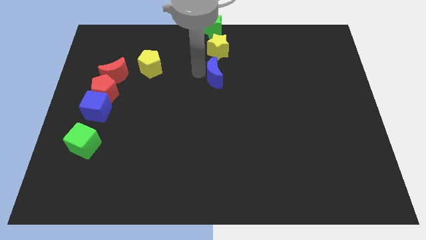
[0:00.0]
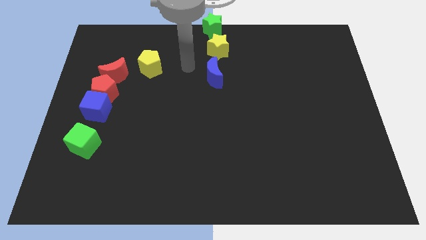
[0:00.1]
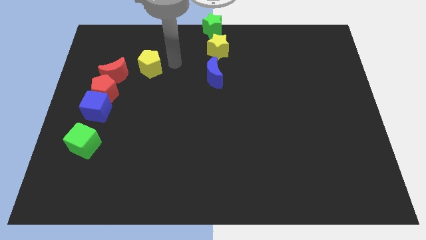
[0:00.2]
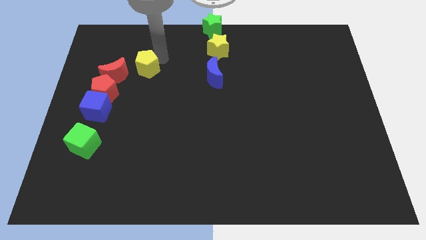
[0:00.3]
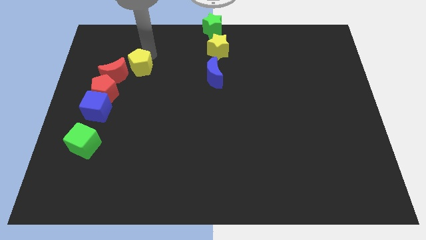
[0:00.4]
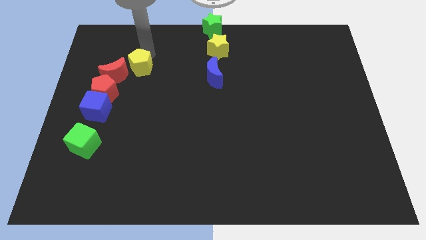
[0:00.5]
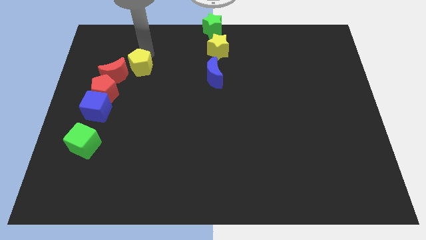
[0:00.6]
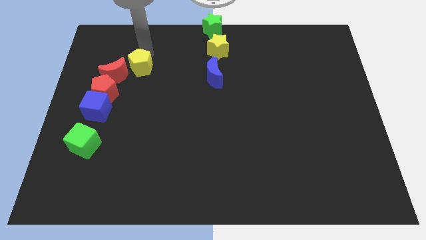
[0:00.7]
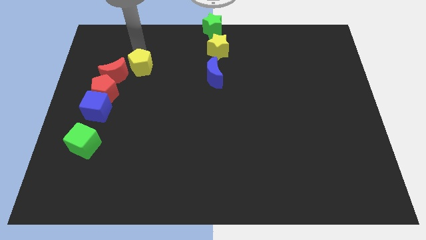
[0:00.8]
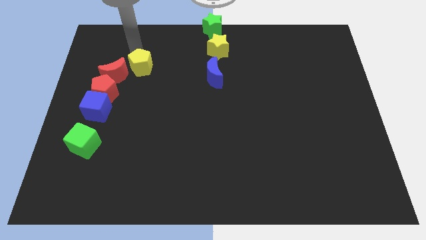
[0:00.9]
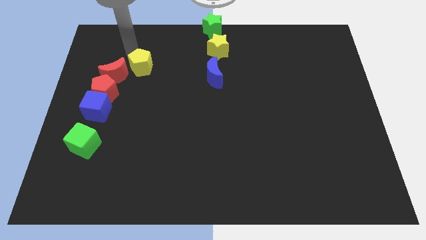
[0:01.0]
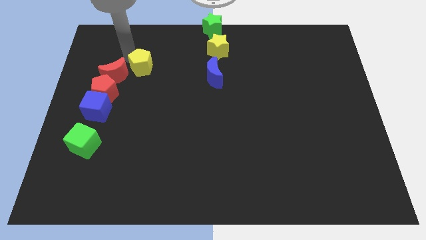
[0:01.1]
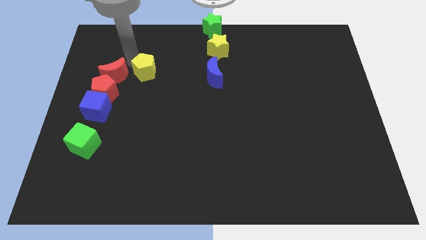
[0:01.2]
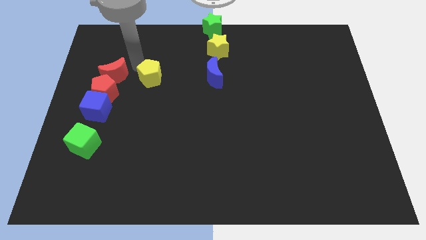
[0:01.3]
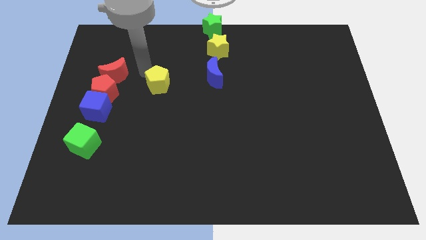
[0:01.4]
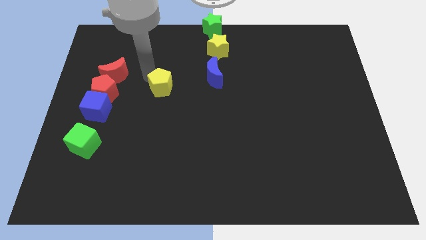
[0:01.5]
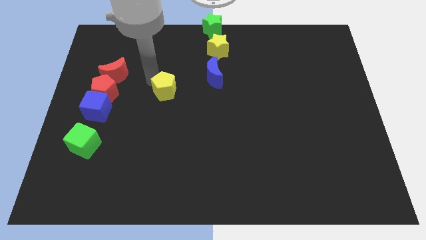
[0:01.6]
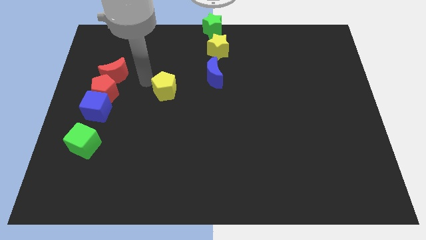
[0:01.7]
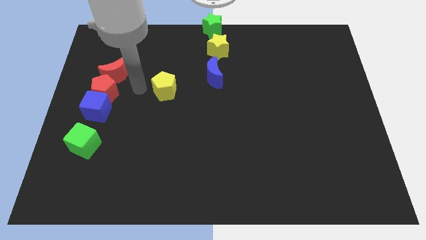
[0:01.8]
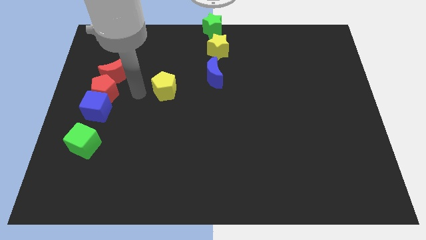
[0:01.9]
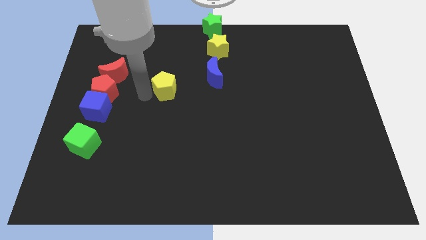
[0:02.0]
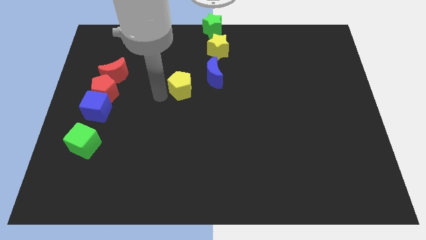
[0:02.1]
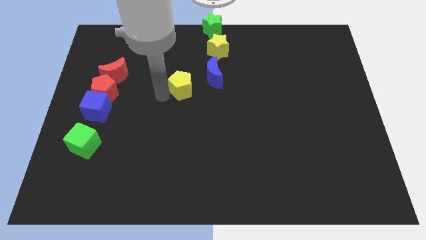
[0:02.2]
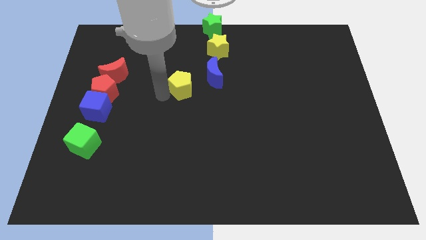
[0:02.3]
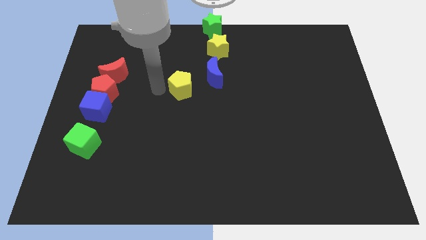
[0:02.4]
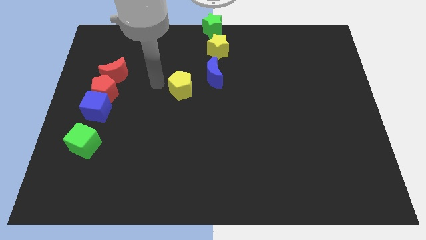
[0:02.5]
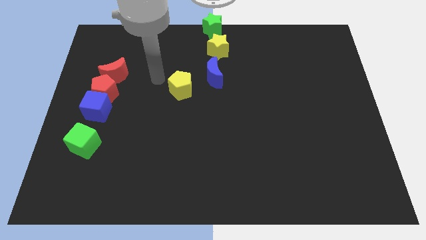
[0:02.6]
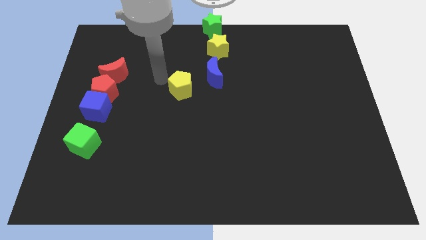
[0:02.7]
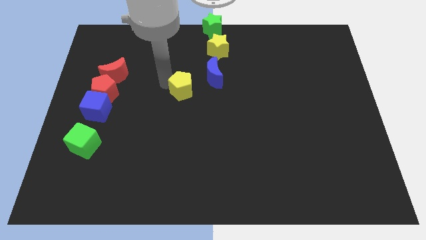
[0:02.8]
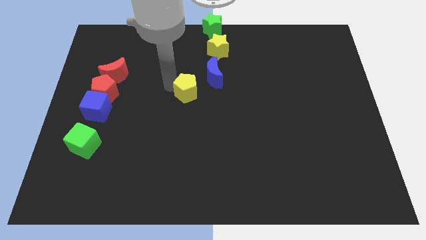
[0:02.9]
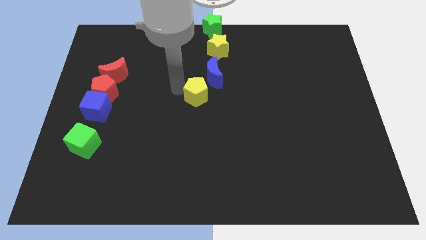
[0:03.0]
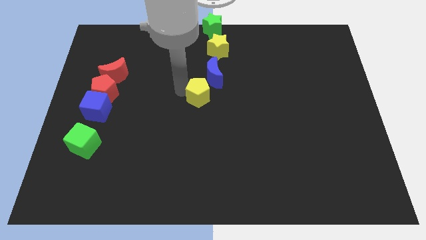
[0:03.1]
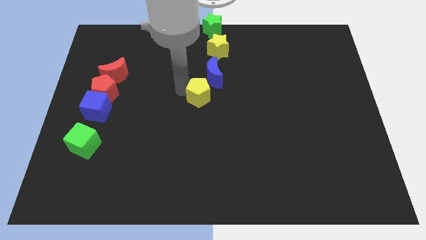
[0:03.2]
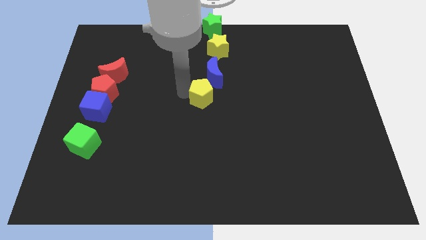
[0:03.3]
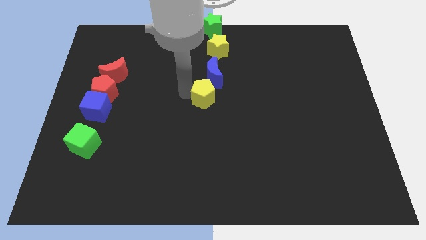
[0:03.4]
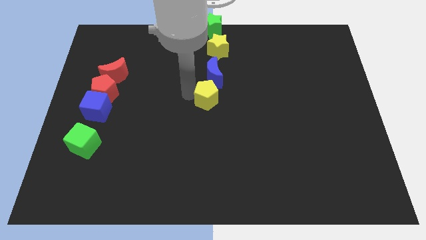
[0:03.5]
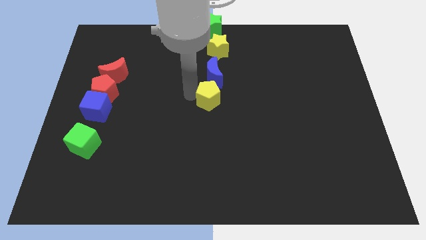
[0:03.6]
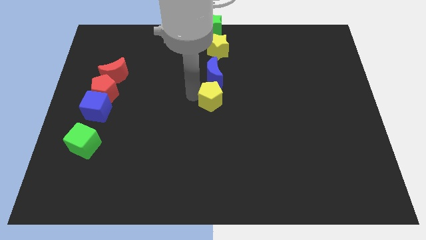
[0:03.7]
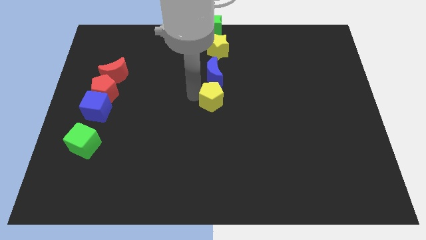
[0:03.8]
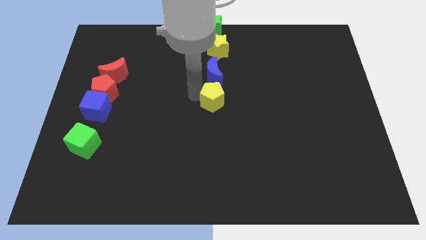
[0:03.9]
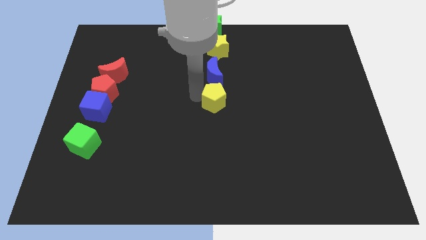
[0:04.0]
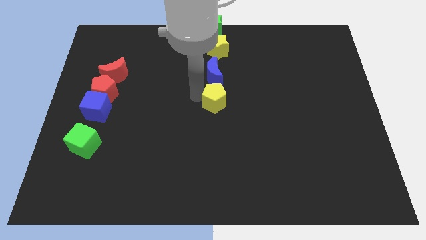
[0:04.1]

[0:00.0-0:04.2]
put the yellow pentagon at the bottom of blue moon

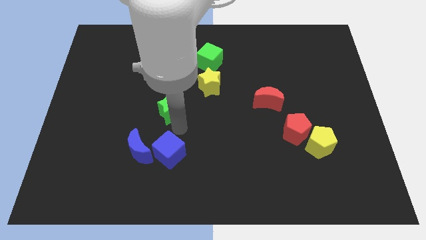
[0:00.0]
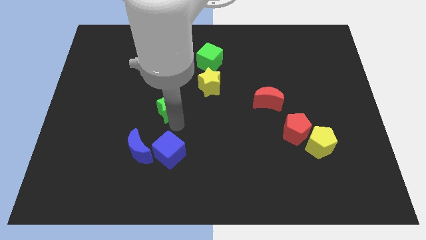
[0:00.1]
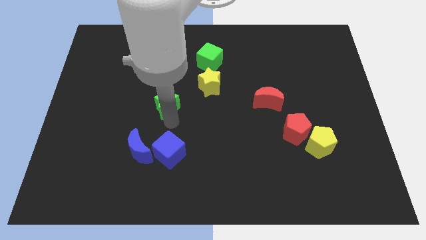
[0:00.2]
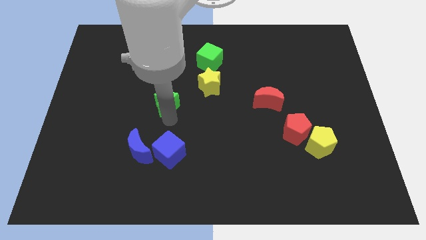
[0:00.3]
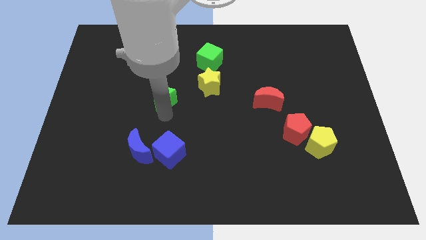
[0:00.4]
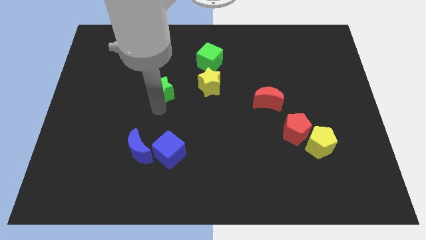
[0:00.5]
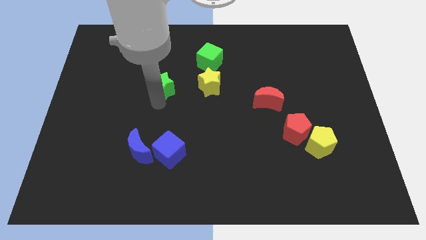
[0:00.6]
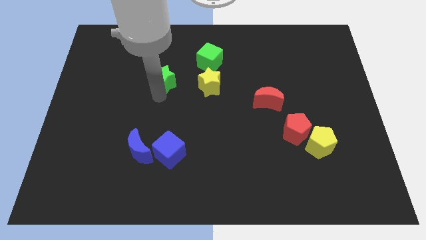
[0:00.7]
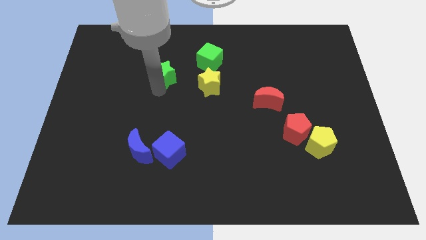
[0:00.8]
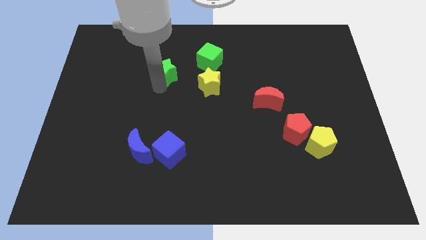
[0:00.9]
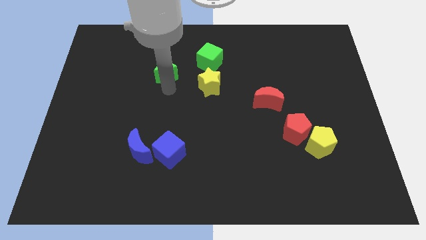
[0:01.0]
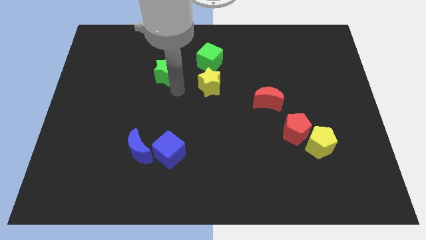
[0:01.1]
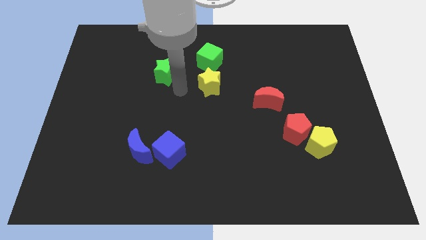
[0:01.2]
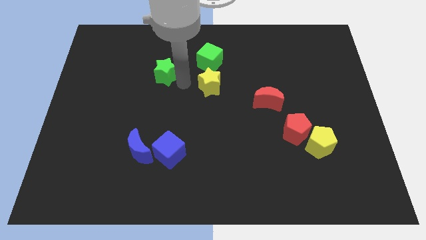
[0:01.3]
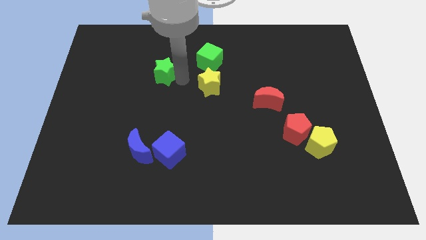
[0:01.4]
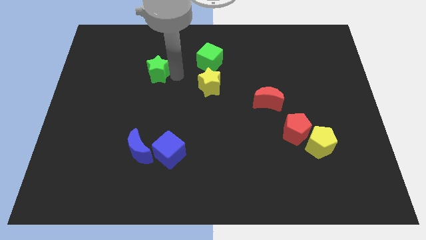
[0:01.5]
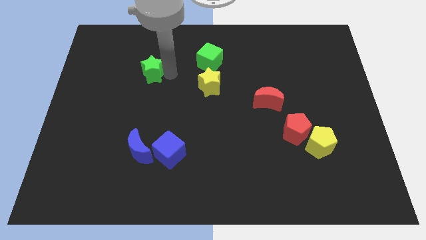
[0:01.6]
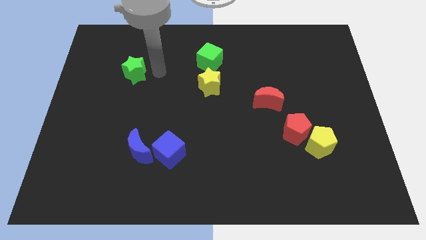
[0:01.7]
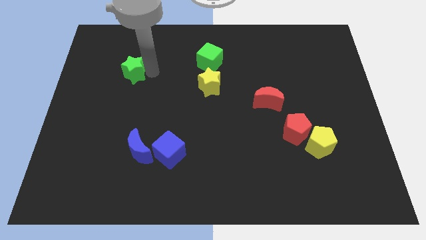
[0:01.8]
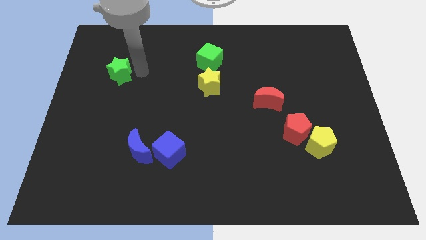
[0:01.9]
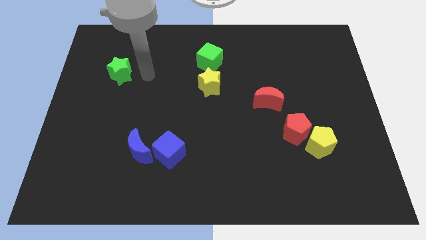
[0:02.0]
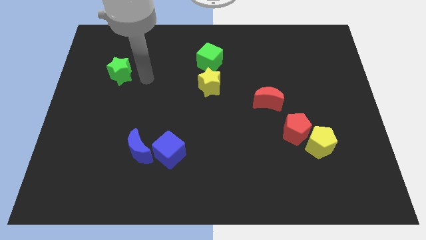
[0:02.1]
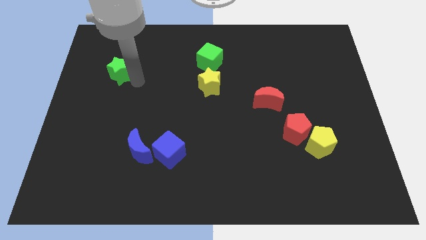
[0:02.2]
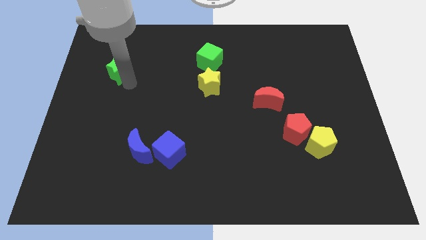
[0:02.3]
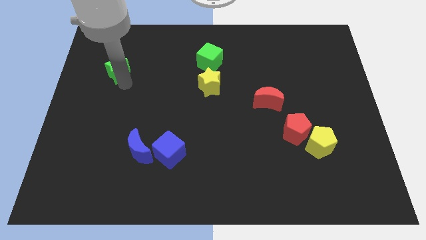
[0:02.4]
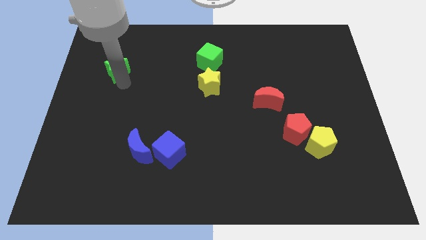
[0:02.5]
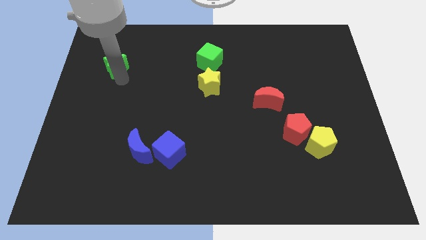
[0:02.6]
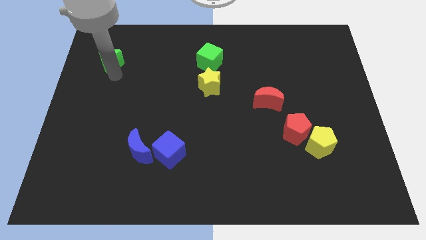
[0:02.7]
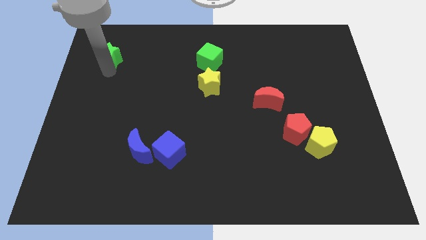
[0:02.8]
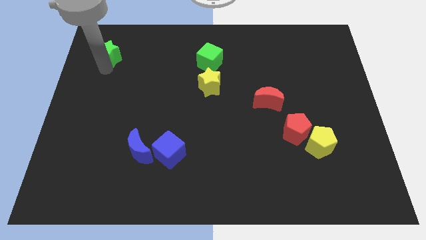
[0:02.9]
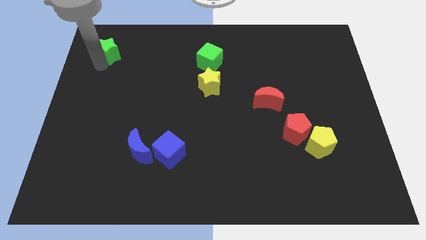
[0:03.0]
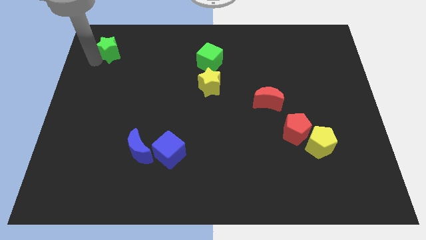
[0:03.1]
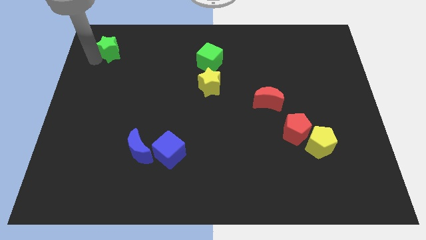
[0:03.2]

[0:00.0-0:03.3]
push the green star upward

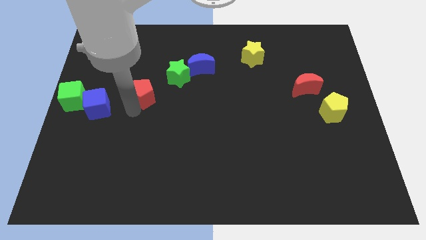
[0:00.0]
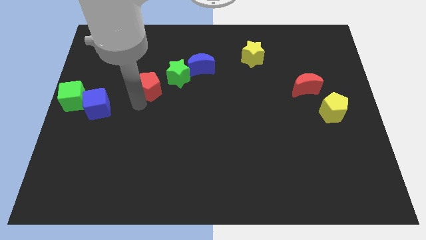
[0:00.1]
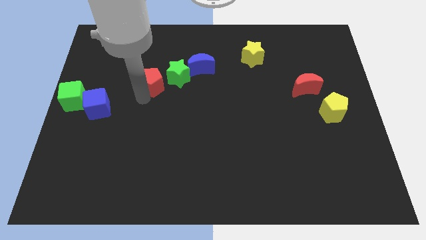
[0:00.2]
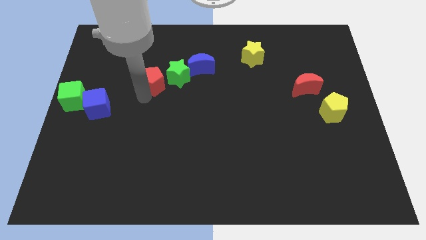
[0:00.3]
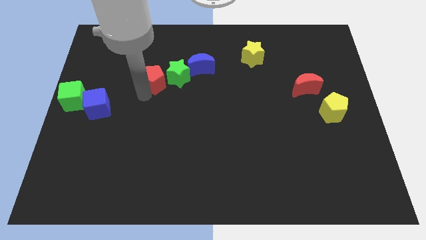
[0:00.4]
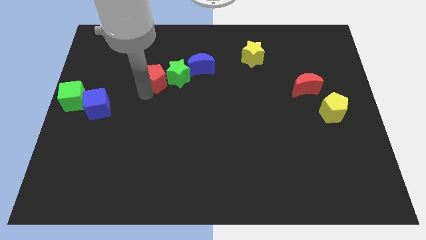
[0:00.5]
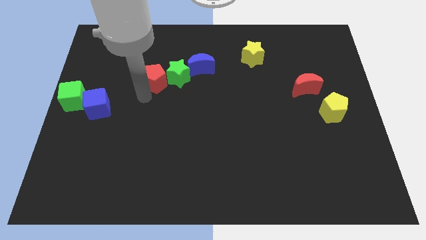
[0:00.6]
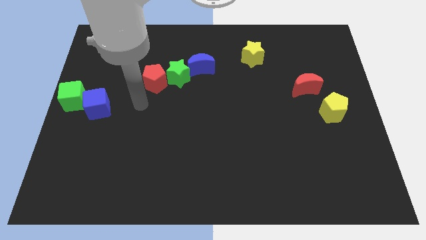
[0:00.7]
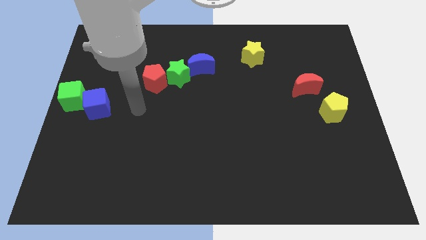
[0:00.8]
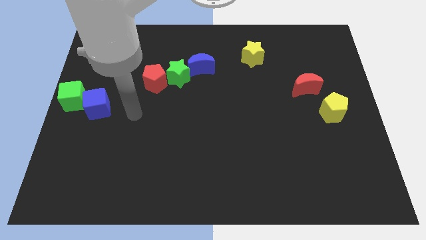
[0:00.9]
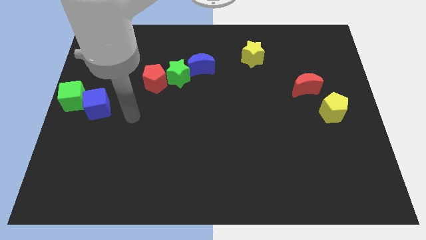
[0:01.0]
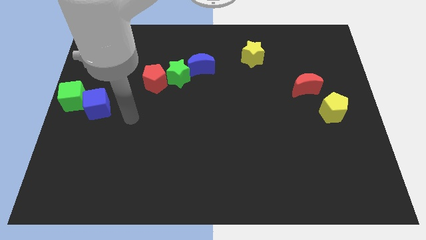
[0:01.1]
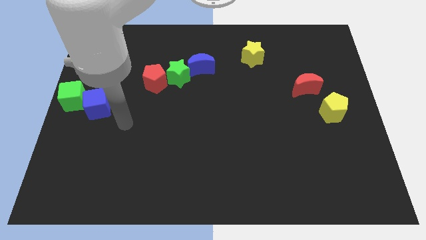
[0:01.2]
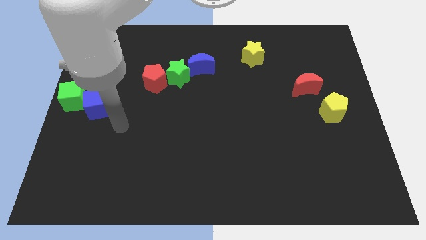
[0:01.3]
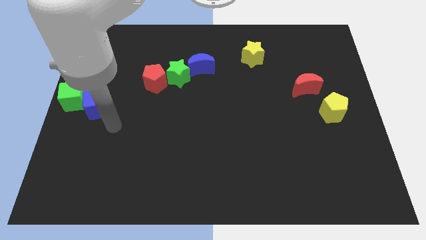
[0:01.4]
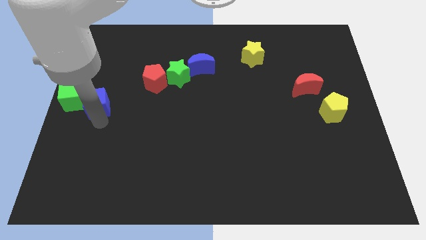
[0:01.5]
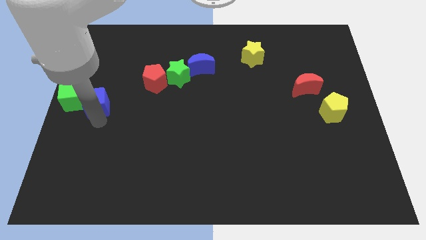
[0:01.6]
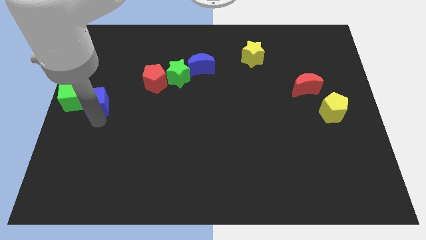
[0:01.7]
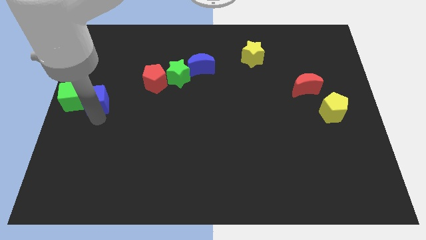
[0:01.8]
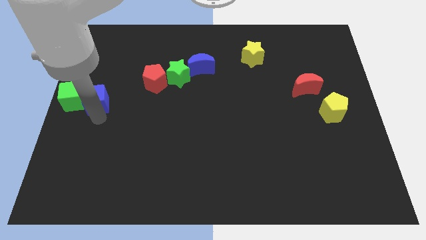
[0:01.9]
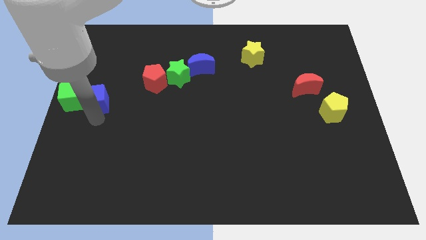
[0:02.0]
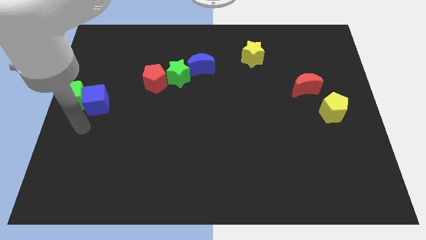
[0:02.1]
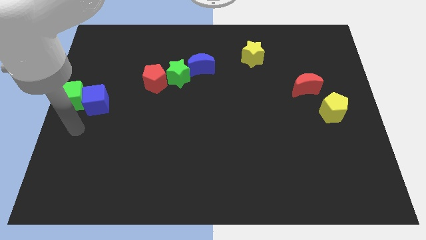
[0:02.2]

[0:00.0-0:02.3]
move the red pentagon to the left side of green star
